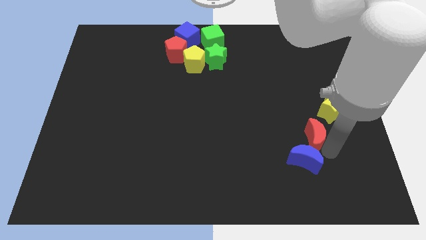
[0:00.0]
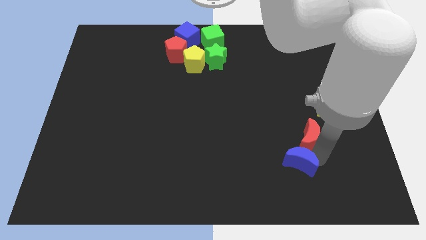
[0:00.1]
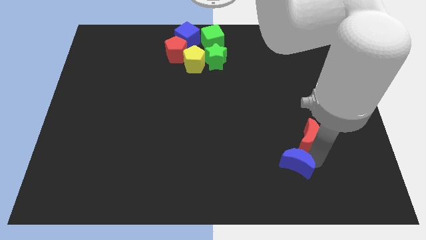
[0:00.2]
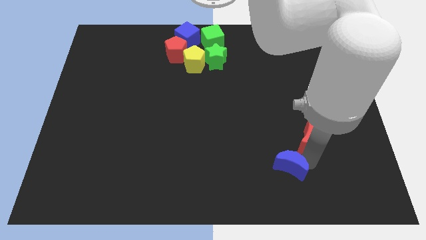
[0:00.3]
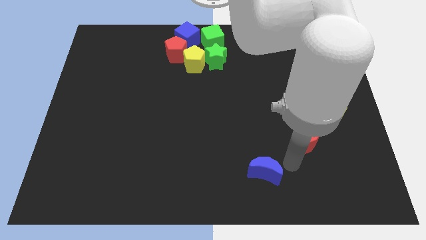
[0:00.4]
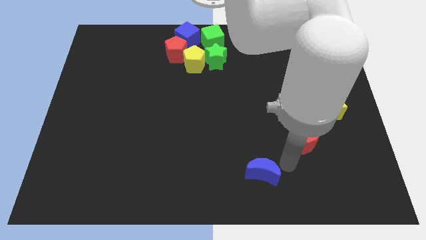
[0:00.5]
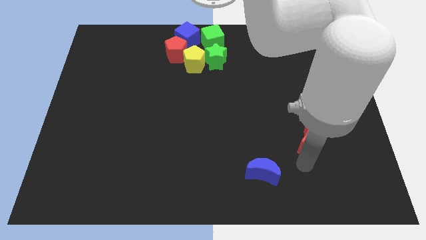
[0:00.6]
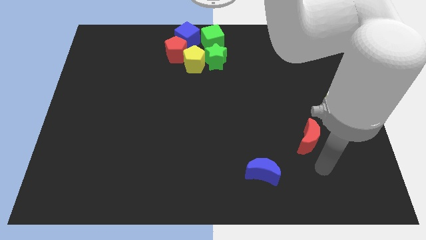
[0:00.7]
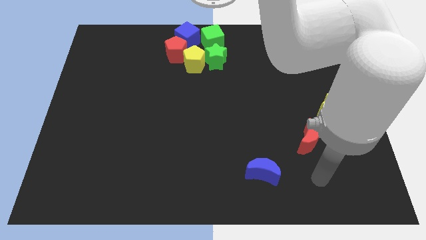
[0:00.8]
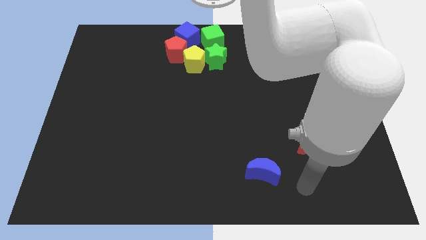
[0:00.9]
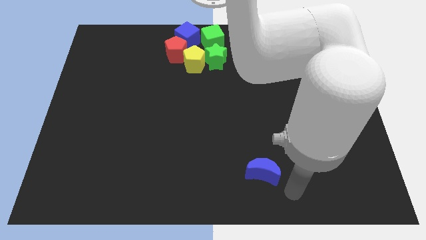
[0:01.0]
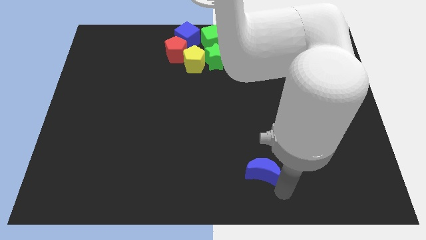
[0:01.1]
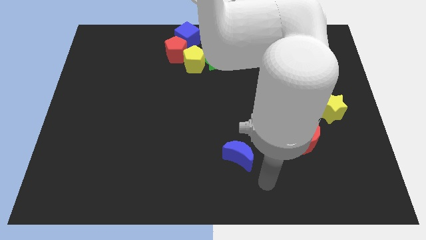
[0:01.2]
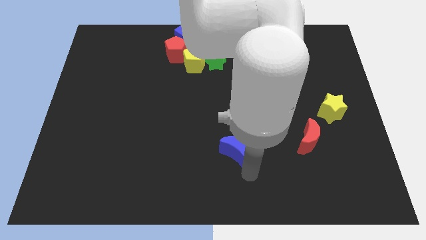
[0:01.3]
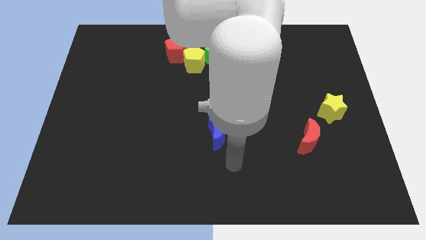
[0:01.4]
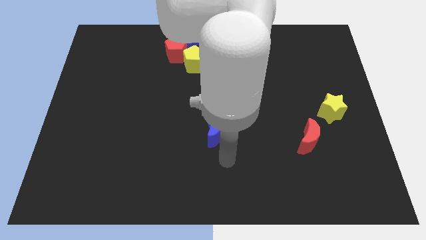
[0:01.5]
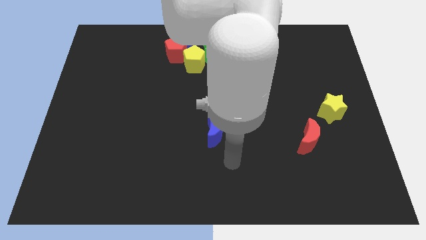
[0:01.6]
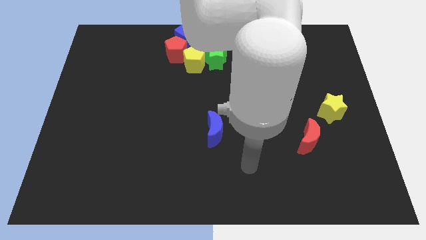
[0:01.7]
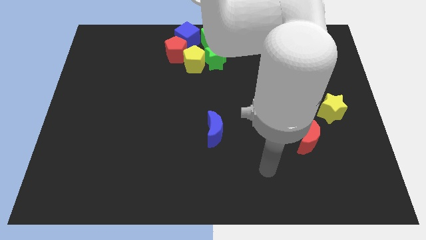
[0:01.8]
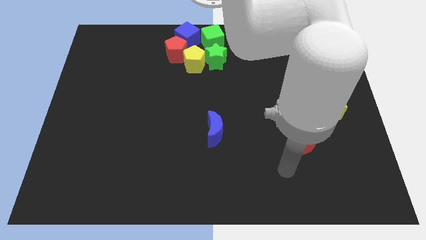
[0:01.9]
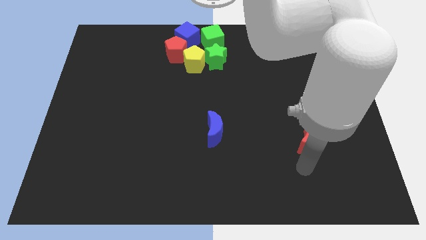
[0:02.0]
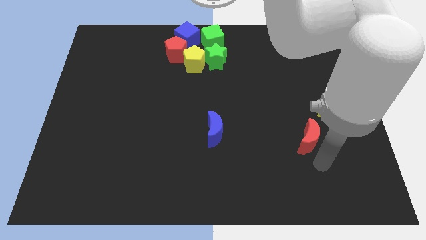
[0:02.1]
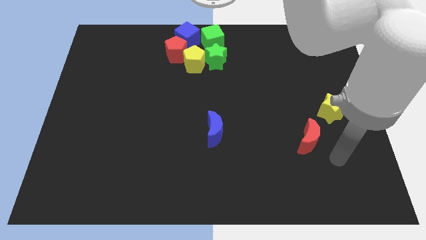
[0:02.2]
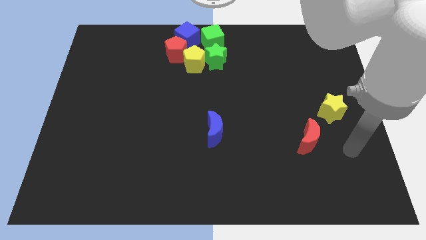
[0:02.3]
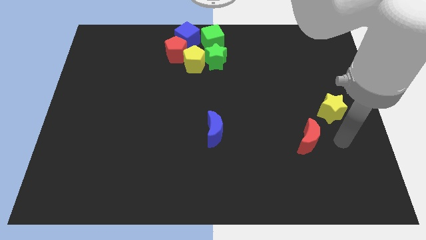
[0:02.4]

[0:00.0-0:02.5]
separate the blue crescent from the red crescent

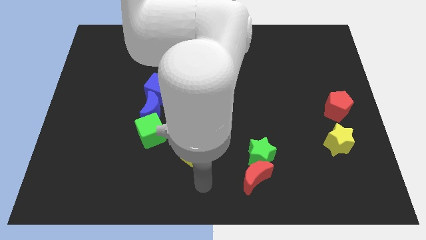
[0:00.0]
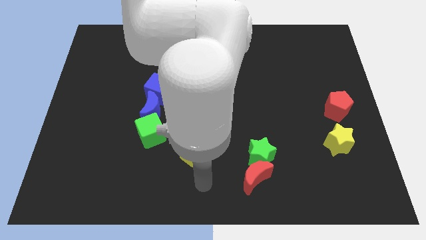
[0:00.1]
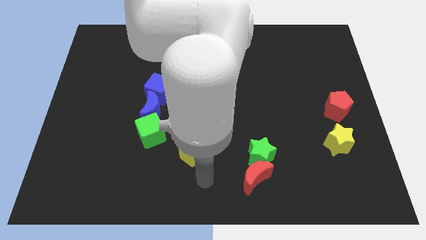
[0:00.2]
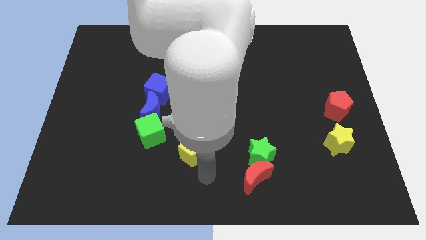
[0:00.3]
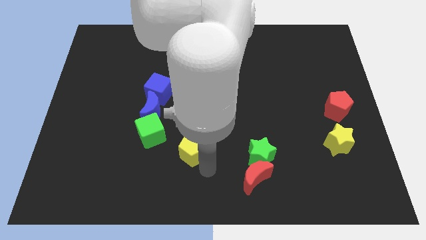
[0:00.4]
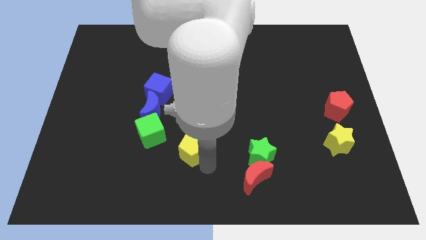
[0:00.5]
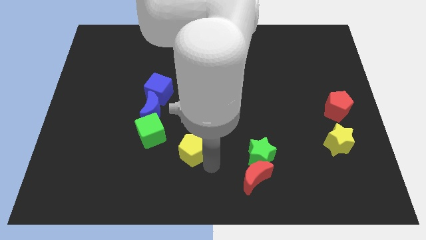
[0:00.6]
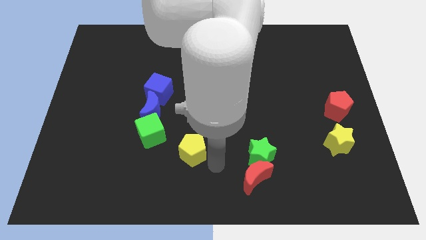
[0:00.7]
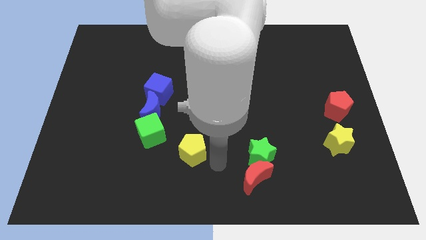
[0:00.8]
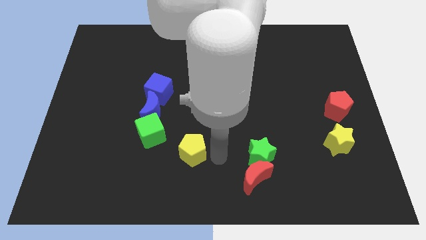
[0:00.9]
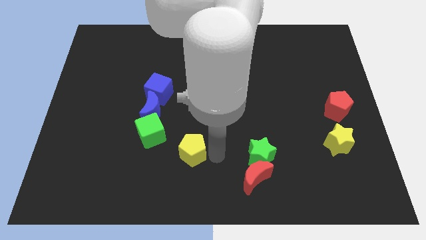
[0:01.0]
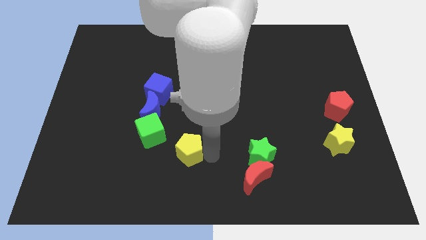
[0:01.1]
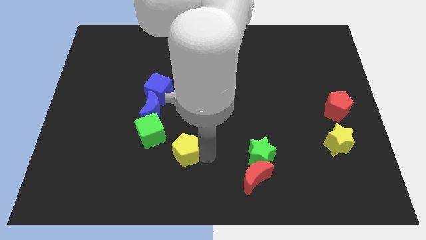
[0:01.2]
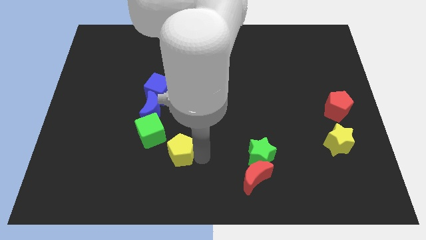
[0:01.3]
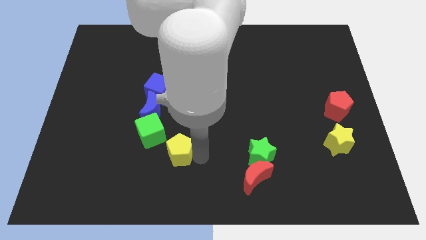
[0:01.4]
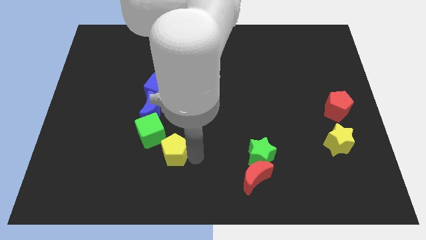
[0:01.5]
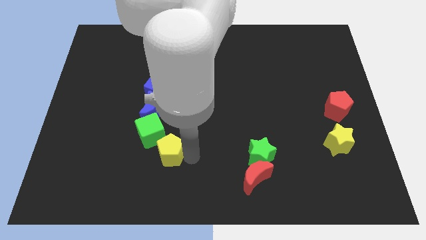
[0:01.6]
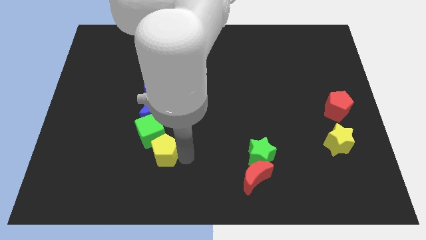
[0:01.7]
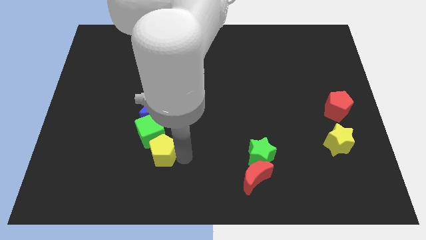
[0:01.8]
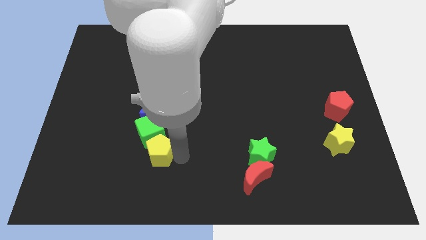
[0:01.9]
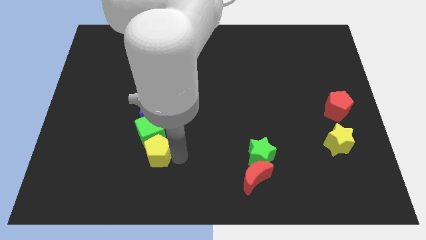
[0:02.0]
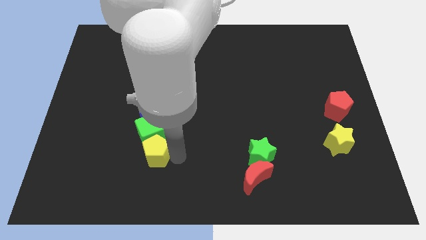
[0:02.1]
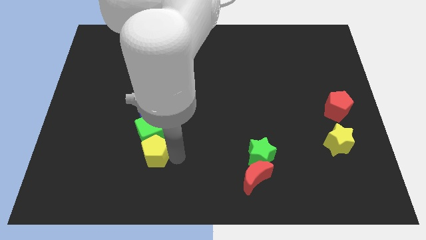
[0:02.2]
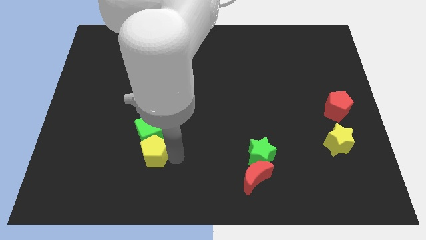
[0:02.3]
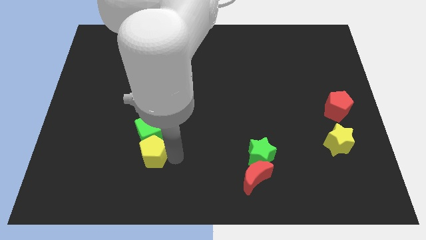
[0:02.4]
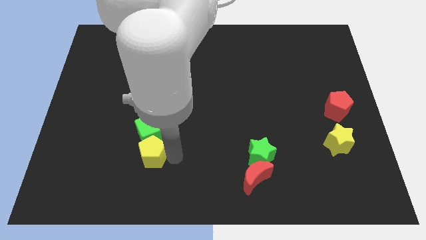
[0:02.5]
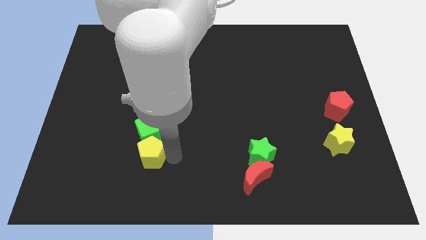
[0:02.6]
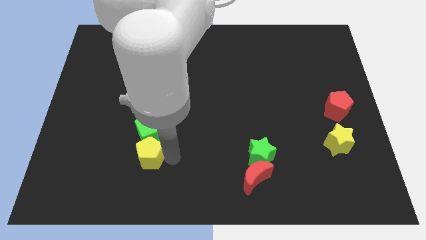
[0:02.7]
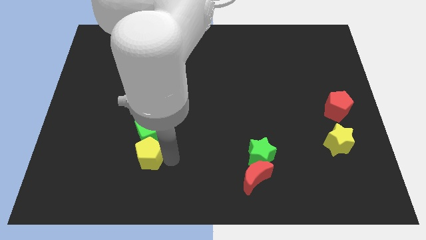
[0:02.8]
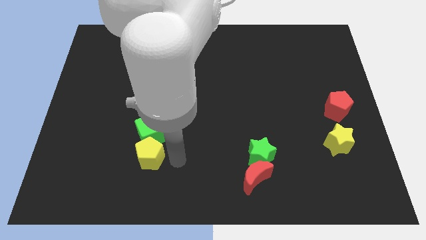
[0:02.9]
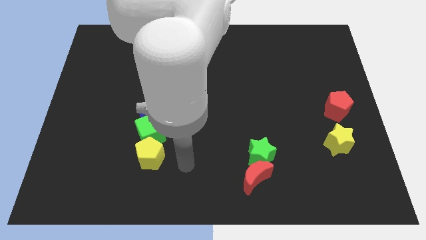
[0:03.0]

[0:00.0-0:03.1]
place the yellow pentagon below the green cube

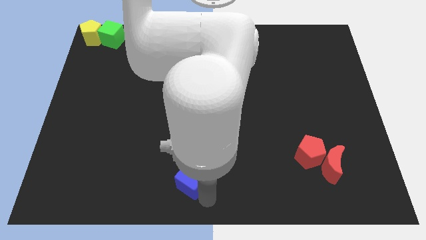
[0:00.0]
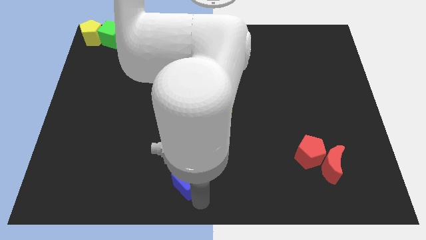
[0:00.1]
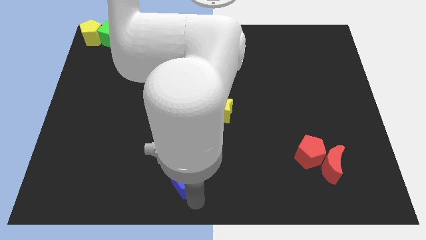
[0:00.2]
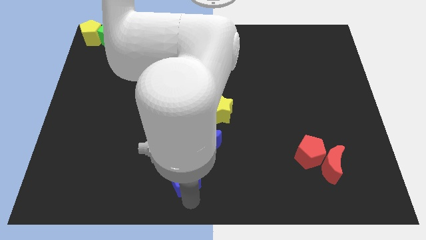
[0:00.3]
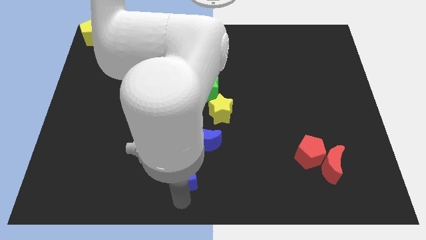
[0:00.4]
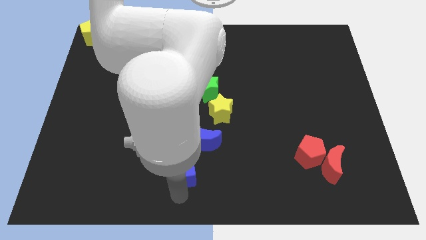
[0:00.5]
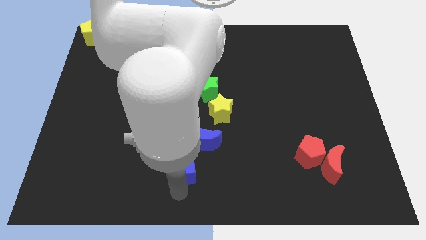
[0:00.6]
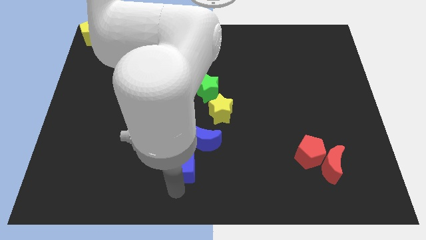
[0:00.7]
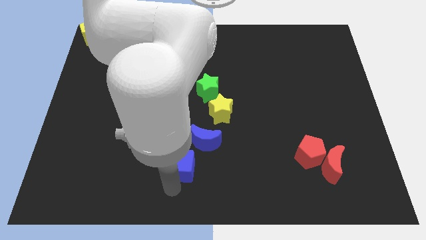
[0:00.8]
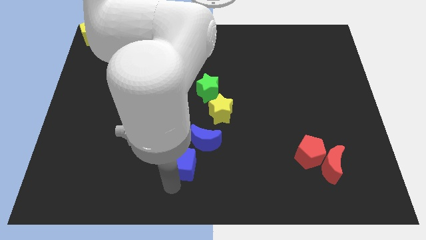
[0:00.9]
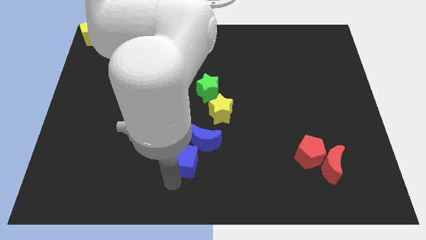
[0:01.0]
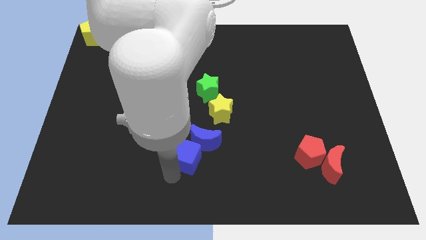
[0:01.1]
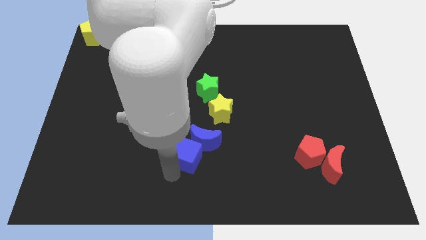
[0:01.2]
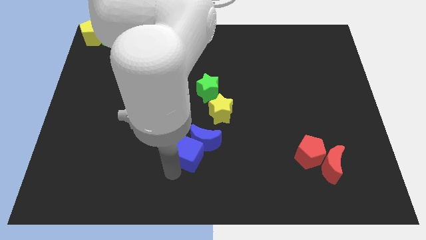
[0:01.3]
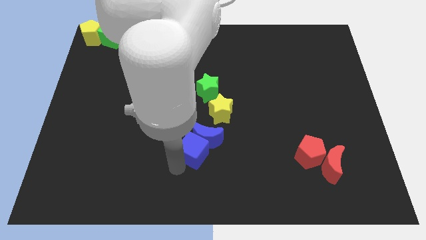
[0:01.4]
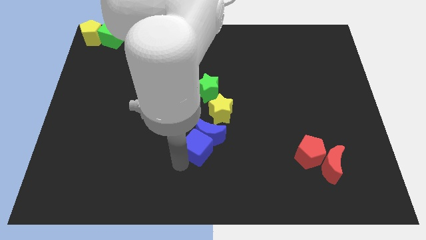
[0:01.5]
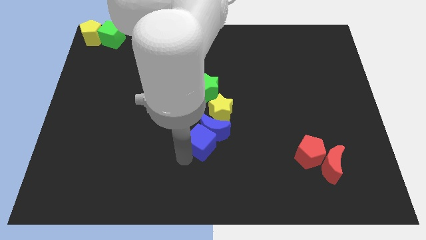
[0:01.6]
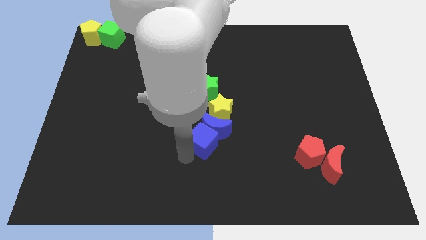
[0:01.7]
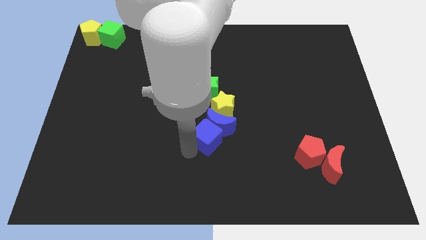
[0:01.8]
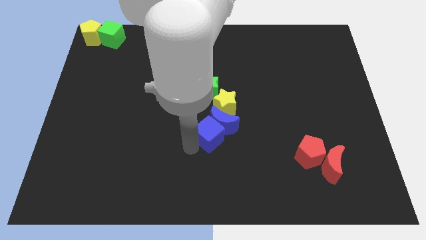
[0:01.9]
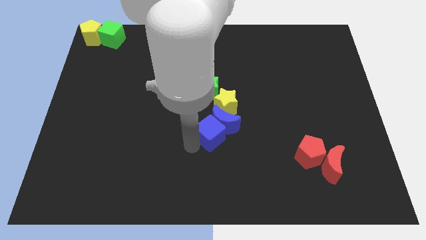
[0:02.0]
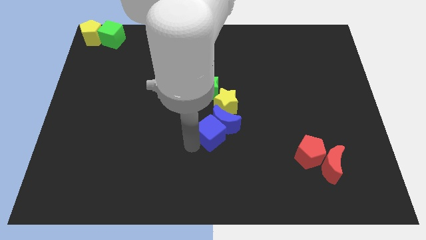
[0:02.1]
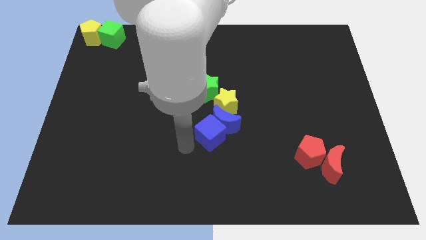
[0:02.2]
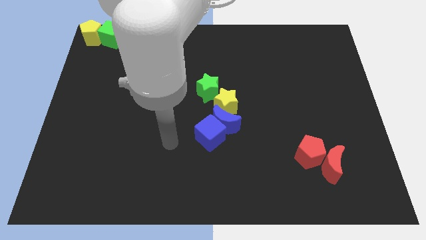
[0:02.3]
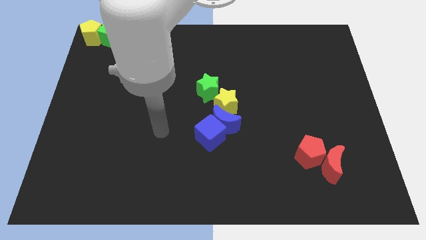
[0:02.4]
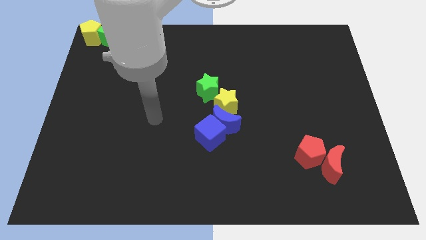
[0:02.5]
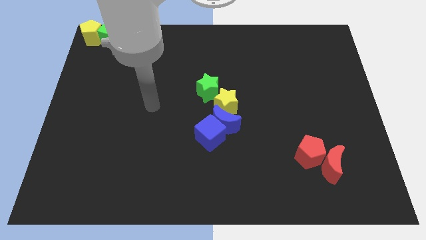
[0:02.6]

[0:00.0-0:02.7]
push the blue cube and blue crescent into the yellow star at the center

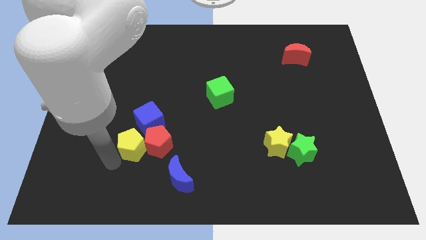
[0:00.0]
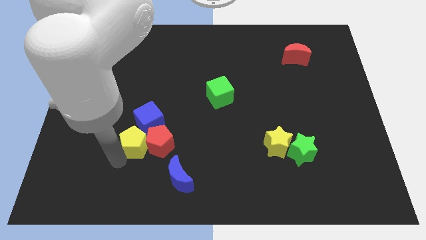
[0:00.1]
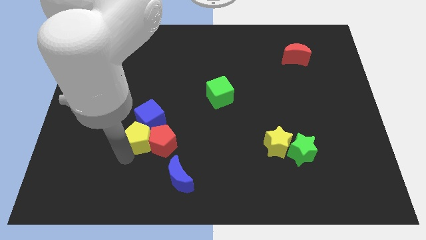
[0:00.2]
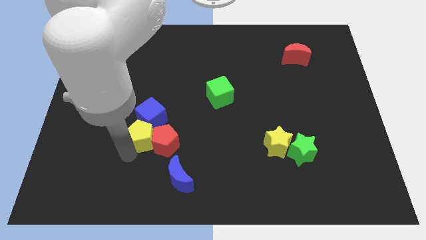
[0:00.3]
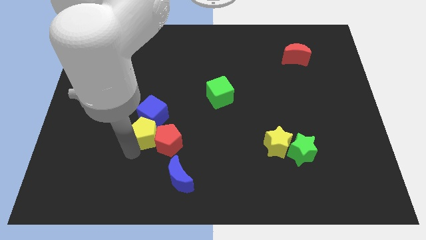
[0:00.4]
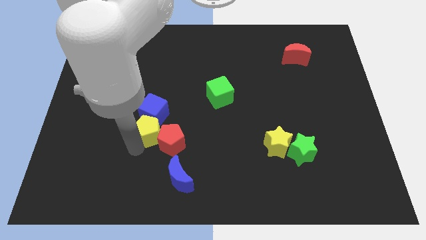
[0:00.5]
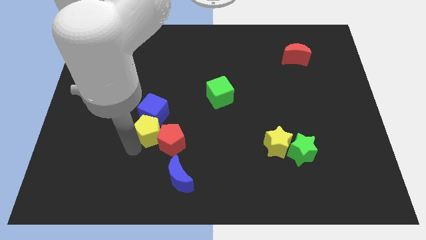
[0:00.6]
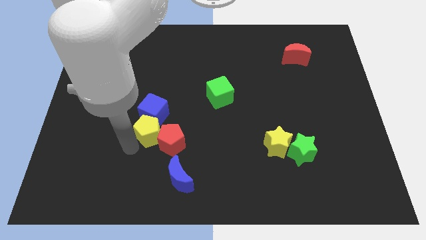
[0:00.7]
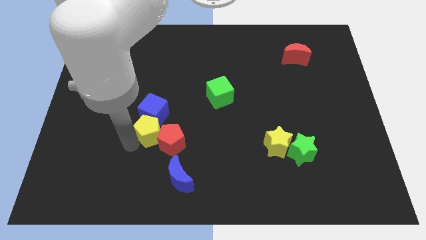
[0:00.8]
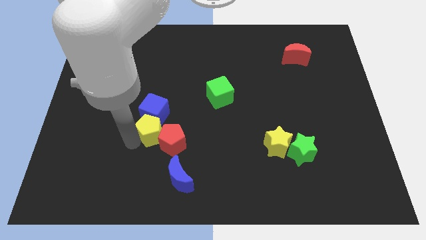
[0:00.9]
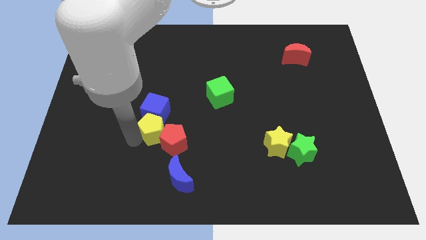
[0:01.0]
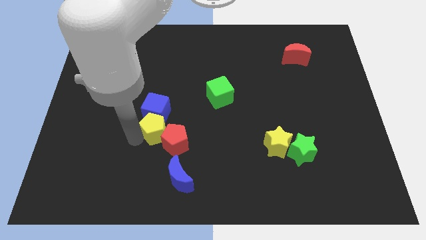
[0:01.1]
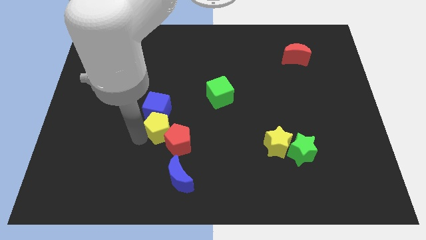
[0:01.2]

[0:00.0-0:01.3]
push the yellow pentagon into the blue cube
